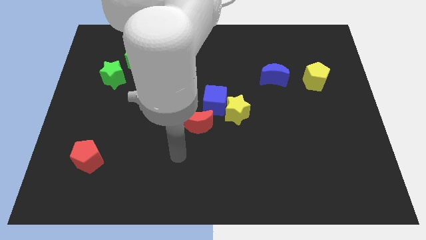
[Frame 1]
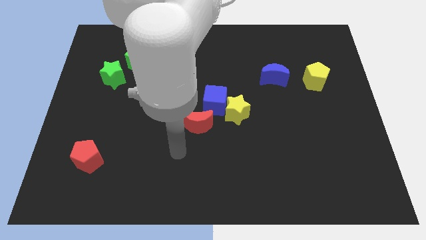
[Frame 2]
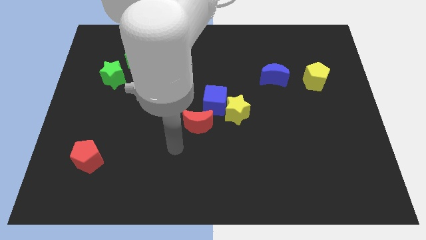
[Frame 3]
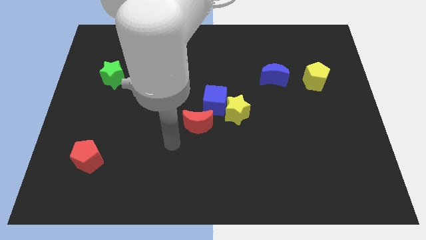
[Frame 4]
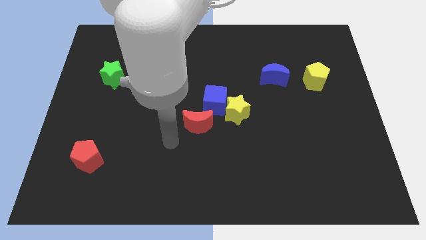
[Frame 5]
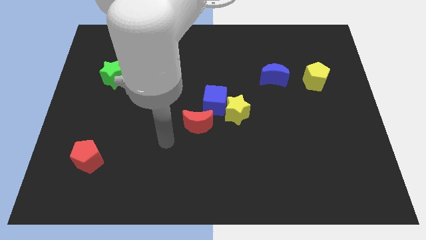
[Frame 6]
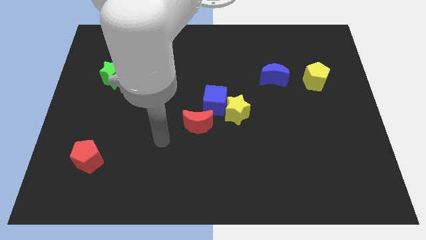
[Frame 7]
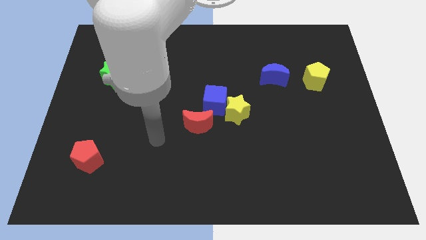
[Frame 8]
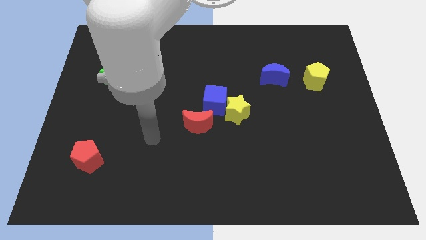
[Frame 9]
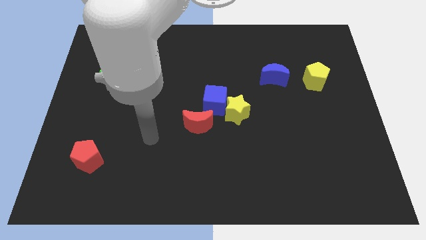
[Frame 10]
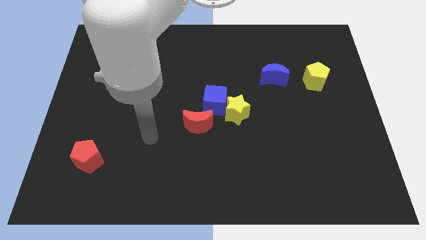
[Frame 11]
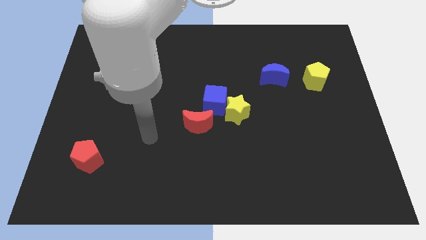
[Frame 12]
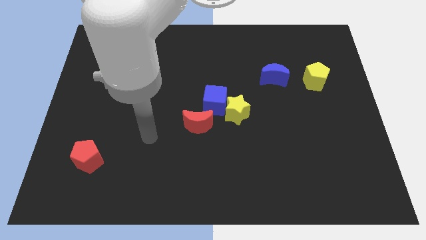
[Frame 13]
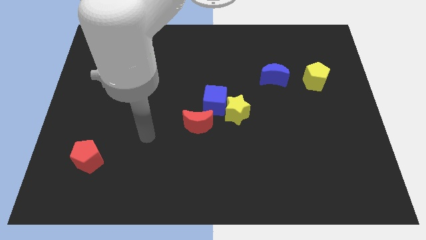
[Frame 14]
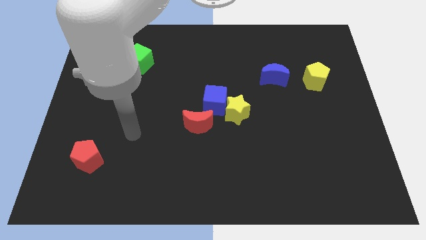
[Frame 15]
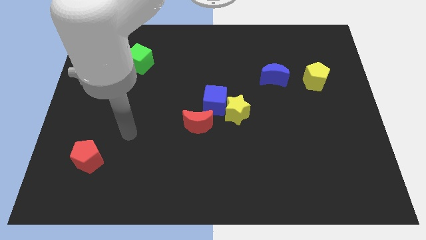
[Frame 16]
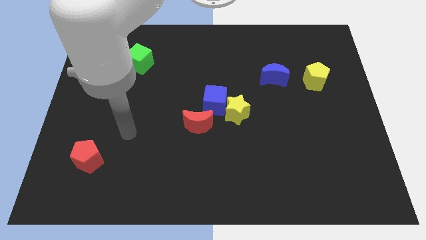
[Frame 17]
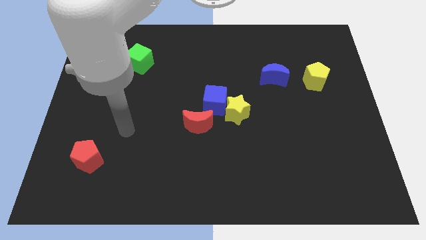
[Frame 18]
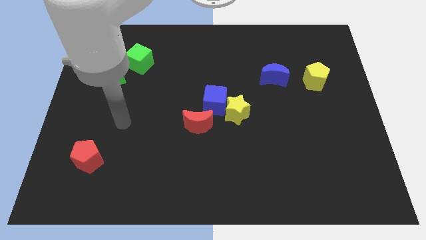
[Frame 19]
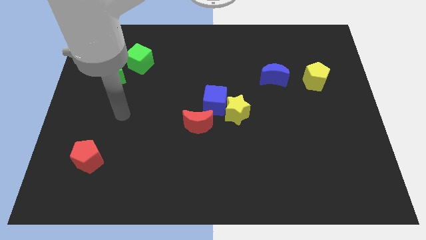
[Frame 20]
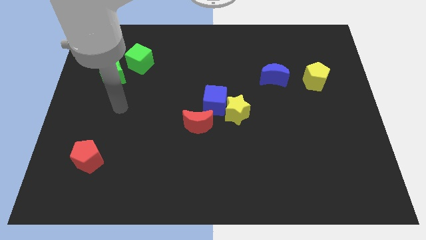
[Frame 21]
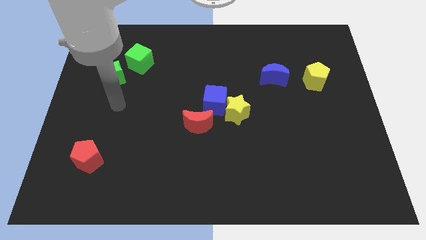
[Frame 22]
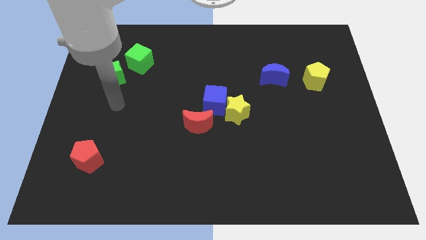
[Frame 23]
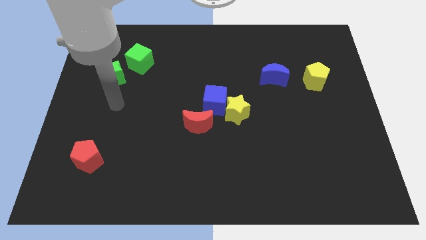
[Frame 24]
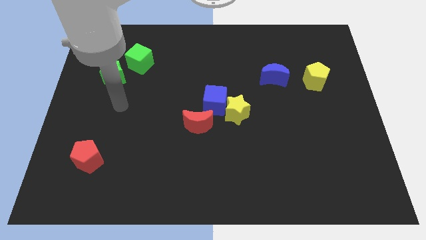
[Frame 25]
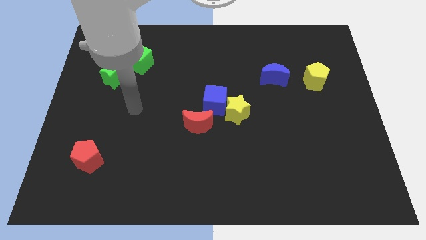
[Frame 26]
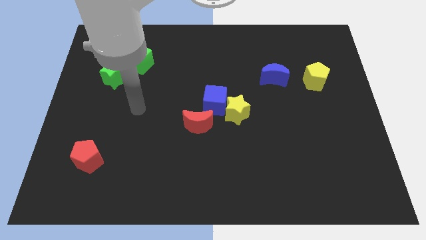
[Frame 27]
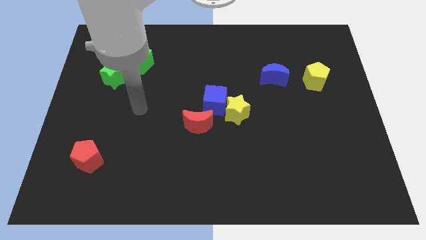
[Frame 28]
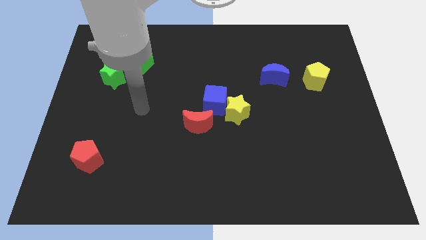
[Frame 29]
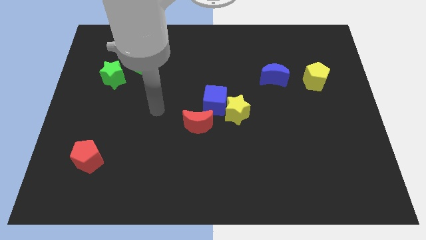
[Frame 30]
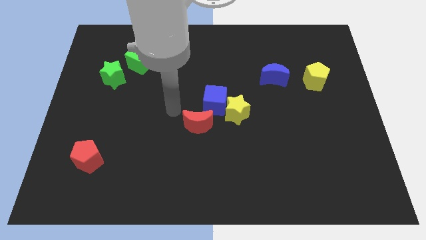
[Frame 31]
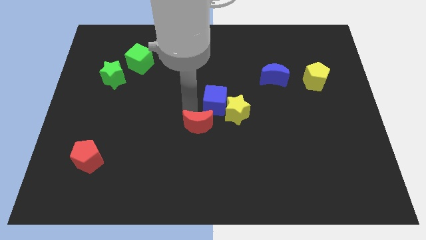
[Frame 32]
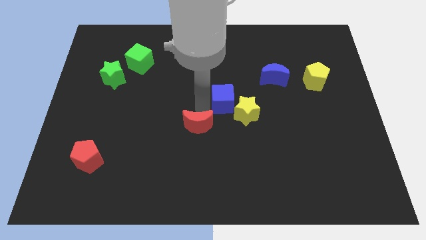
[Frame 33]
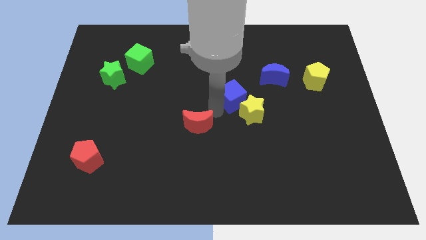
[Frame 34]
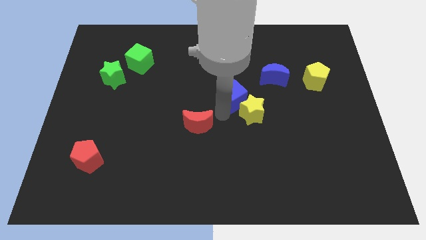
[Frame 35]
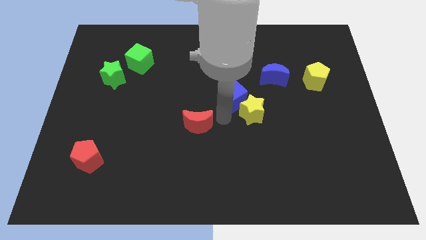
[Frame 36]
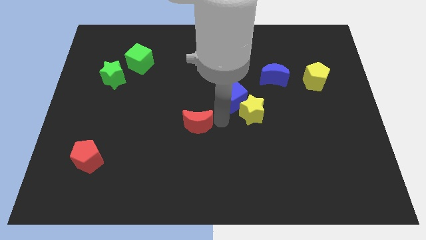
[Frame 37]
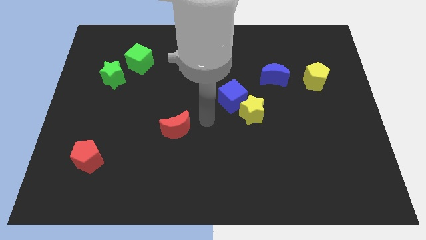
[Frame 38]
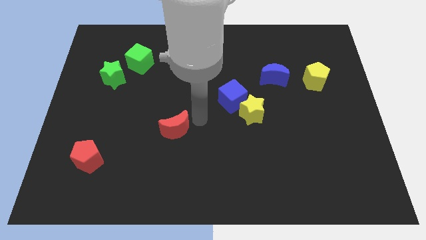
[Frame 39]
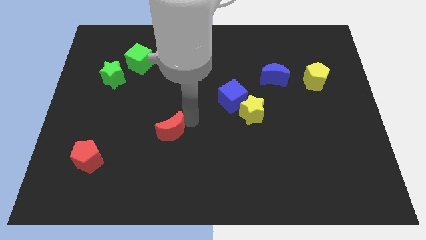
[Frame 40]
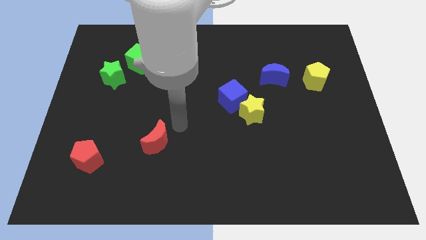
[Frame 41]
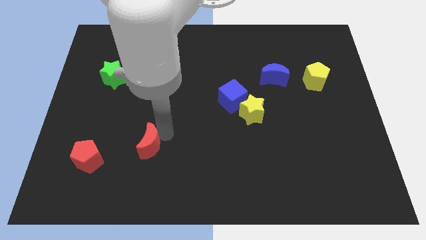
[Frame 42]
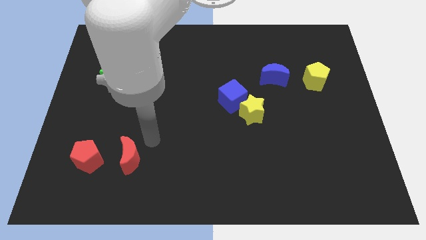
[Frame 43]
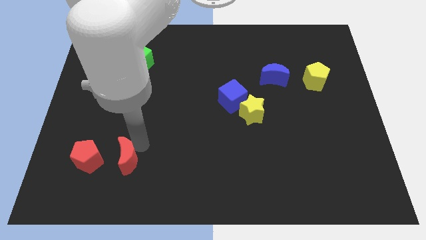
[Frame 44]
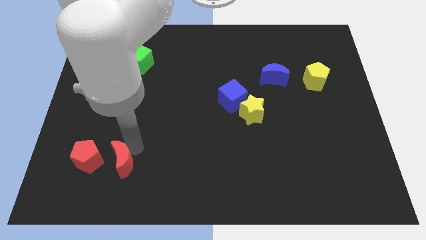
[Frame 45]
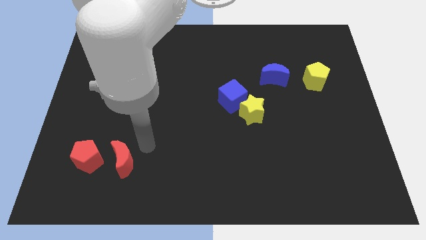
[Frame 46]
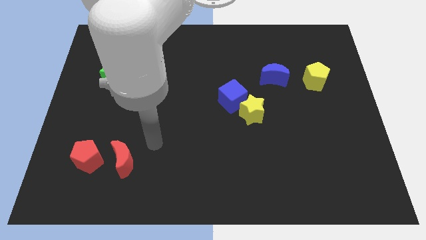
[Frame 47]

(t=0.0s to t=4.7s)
move the red moon to the right side of the red pentagon

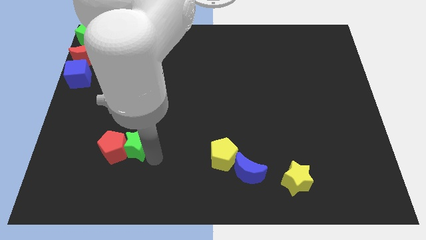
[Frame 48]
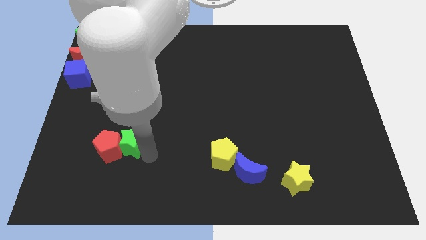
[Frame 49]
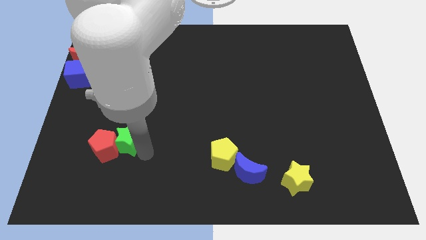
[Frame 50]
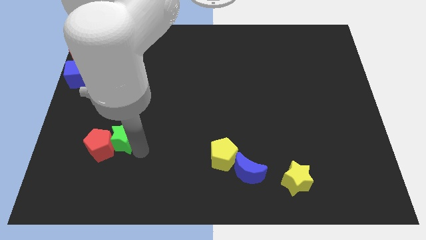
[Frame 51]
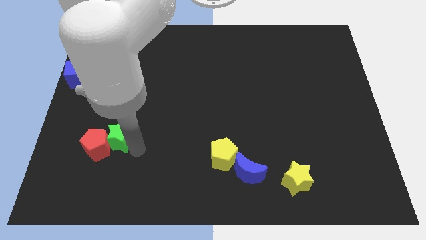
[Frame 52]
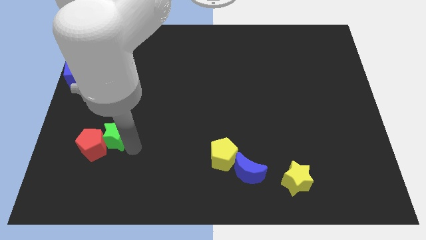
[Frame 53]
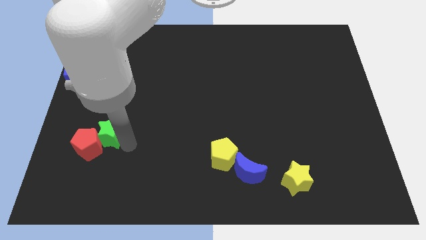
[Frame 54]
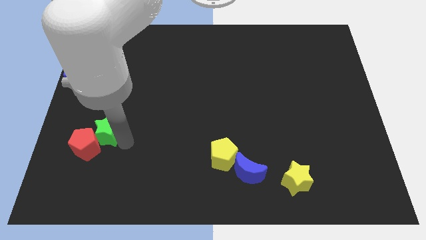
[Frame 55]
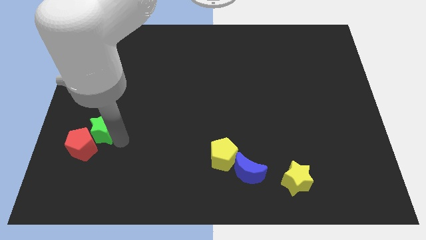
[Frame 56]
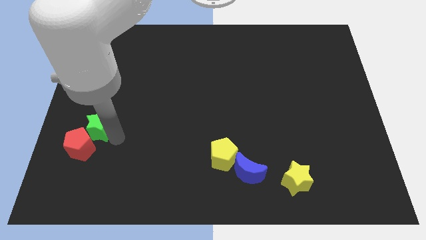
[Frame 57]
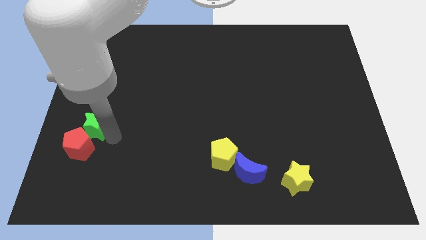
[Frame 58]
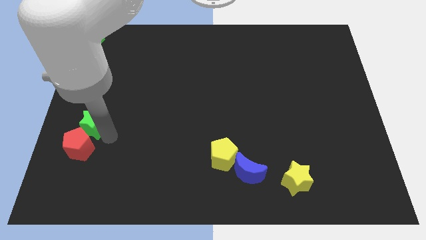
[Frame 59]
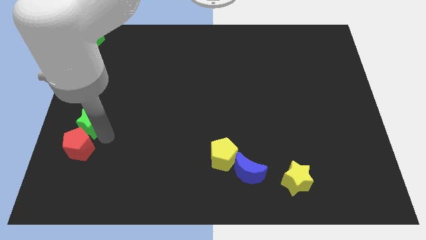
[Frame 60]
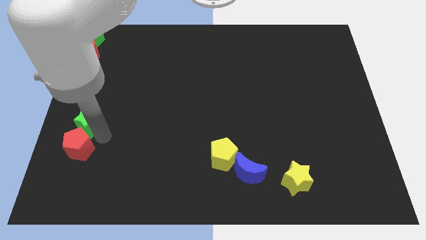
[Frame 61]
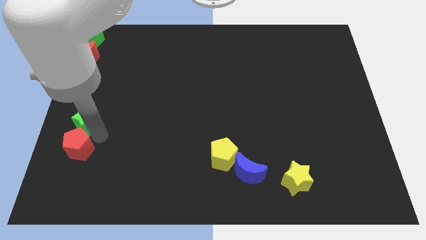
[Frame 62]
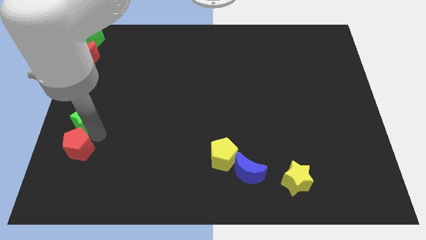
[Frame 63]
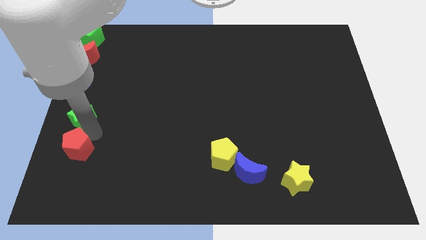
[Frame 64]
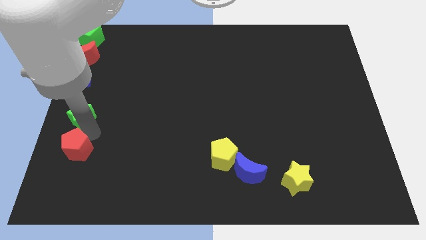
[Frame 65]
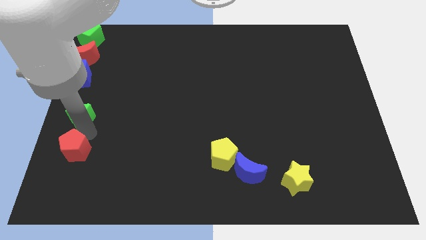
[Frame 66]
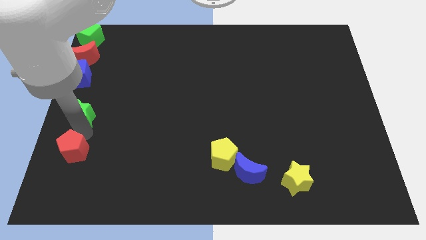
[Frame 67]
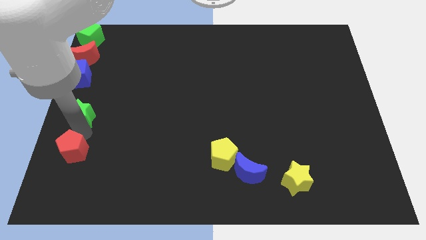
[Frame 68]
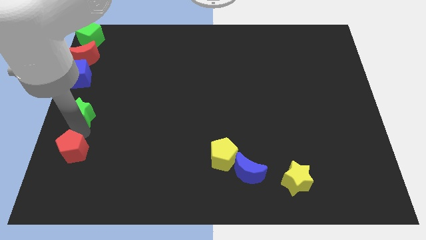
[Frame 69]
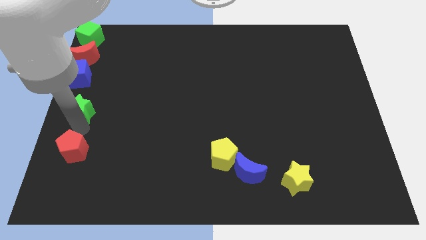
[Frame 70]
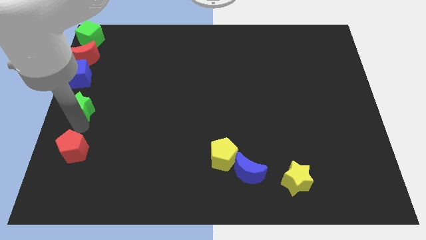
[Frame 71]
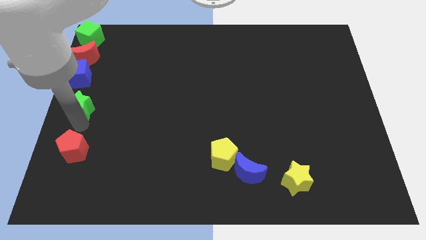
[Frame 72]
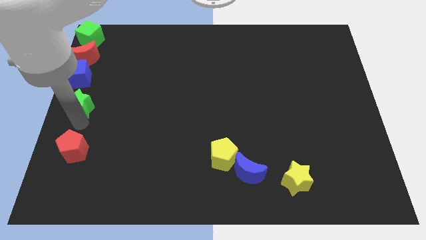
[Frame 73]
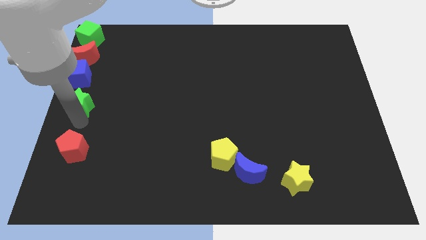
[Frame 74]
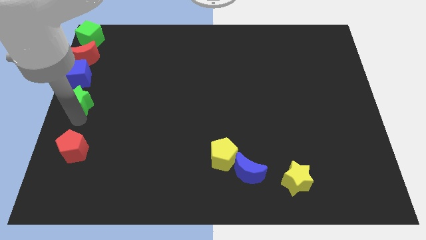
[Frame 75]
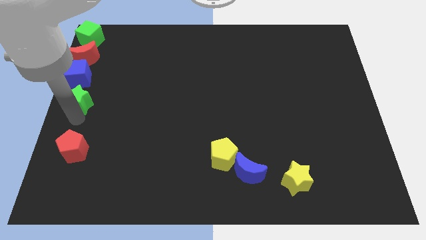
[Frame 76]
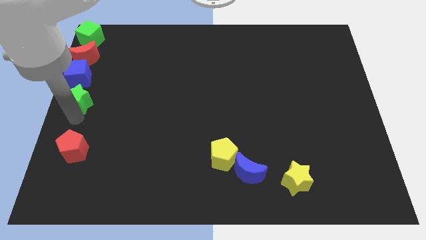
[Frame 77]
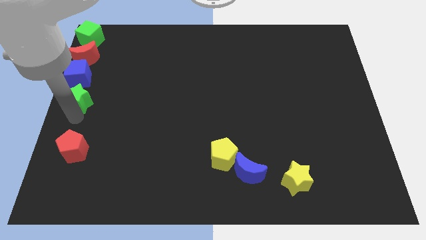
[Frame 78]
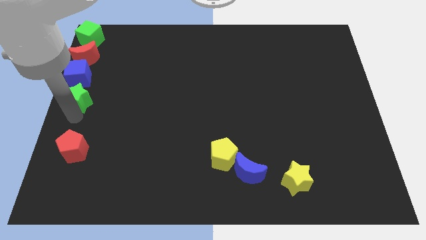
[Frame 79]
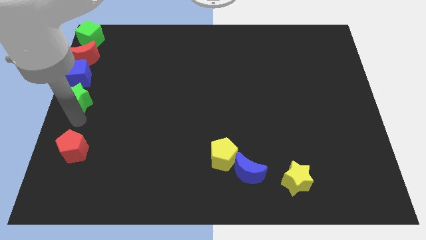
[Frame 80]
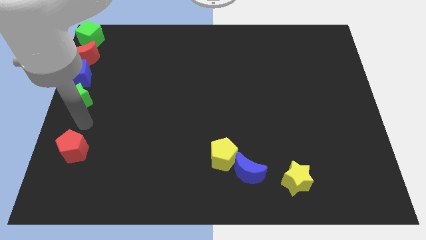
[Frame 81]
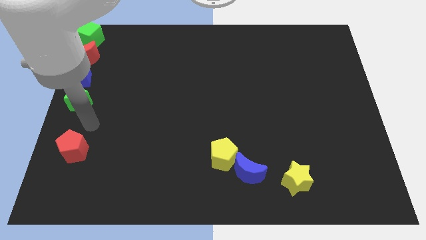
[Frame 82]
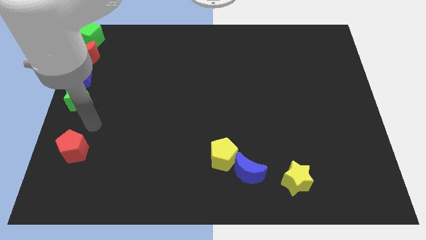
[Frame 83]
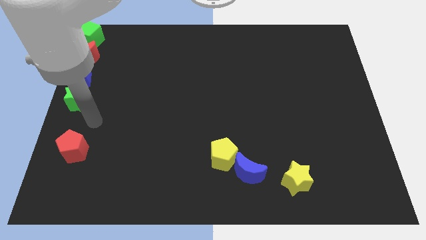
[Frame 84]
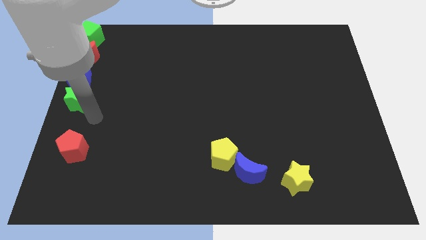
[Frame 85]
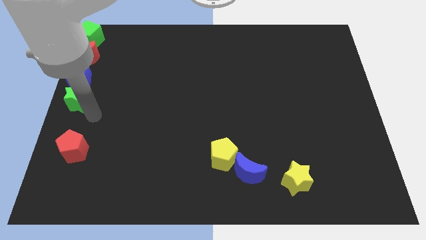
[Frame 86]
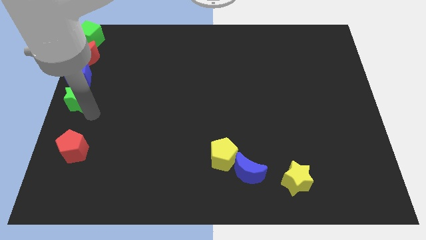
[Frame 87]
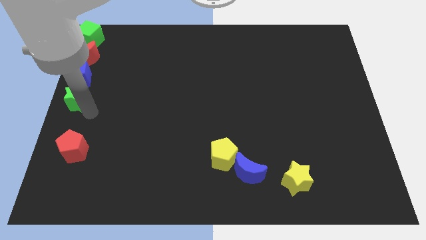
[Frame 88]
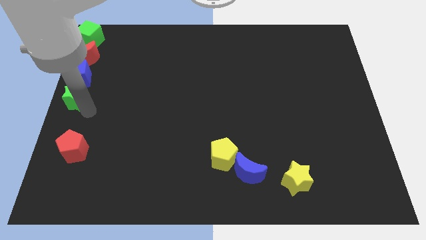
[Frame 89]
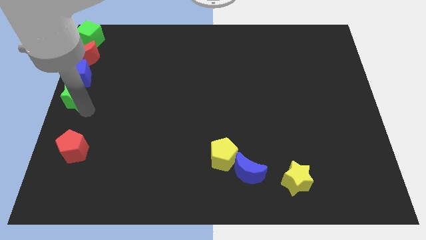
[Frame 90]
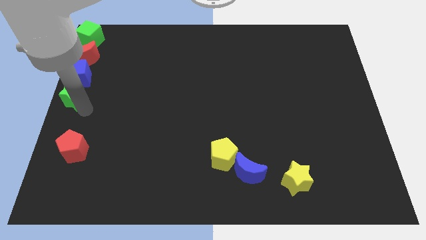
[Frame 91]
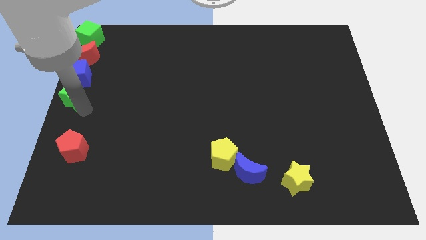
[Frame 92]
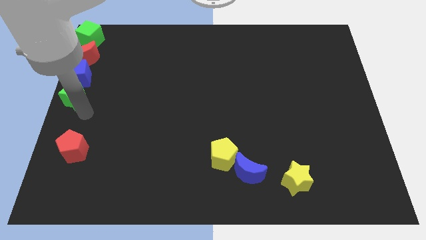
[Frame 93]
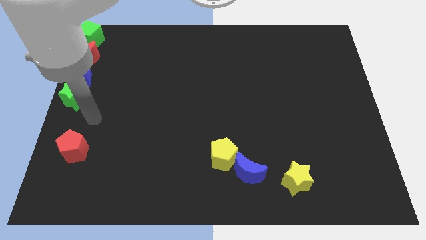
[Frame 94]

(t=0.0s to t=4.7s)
separate the green star from the red pentagon
